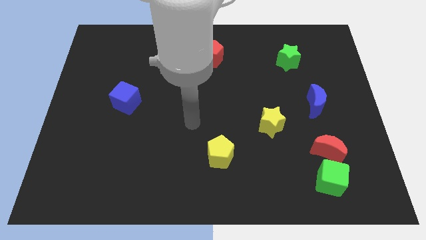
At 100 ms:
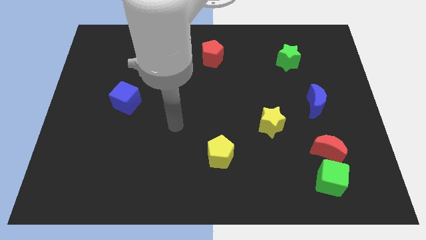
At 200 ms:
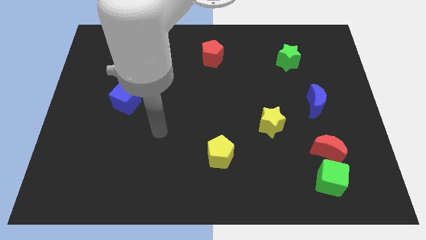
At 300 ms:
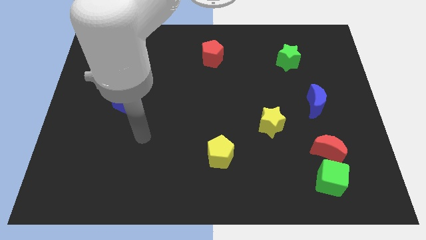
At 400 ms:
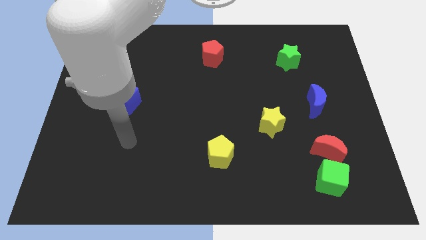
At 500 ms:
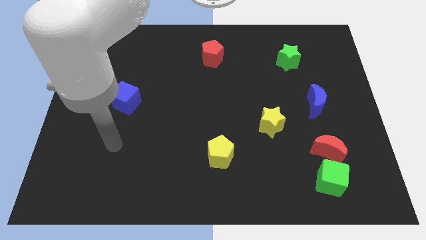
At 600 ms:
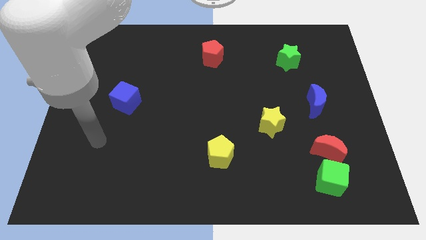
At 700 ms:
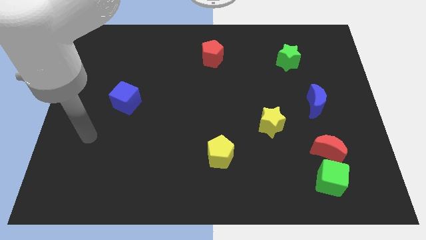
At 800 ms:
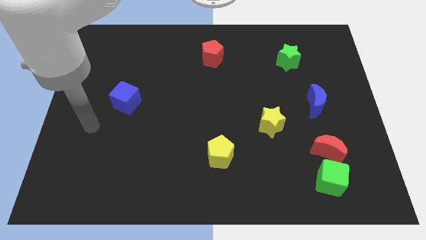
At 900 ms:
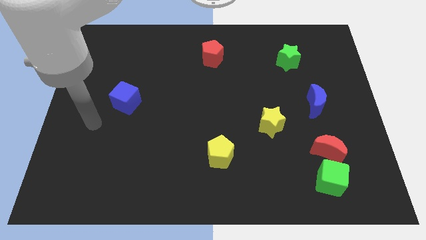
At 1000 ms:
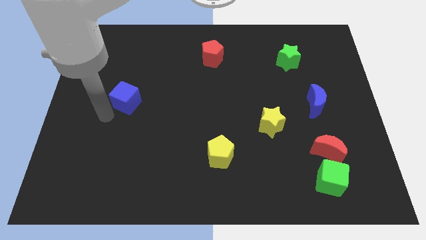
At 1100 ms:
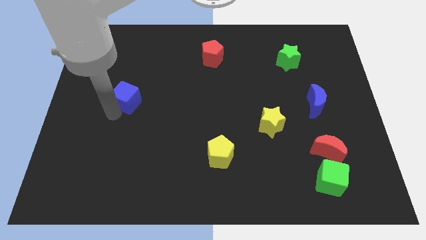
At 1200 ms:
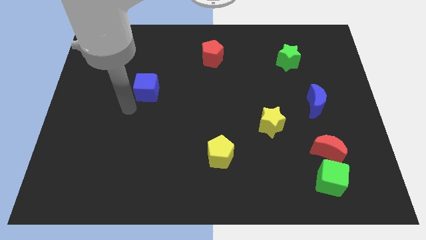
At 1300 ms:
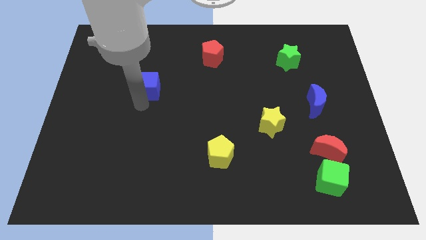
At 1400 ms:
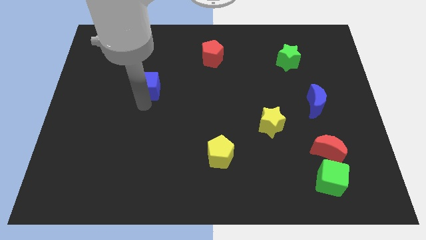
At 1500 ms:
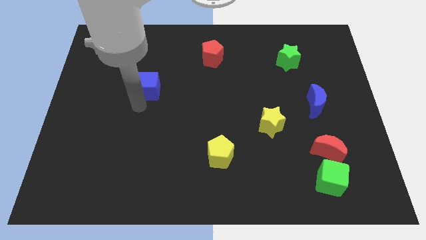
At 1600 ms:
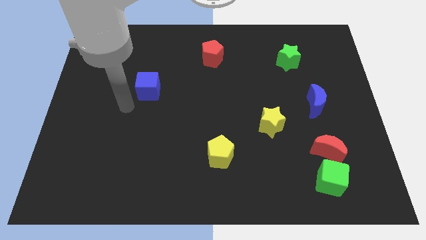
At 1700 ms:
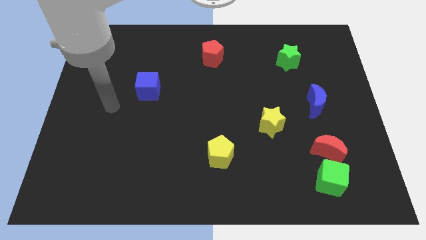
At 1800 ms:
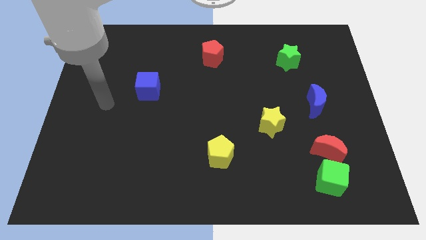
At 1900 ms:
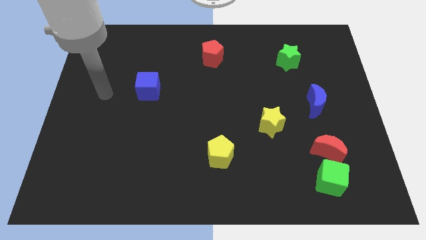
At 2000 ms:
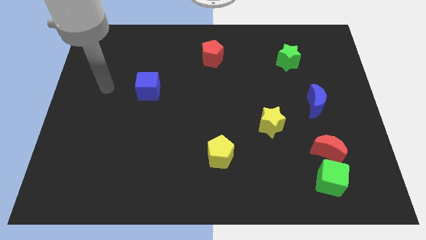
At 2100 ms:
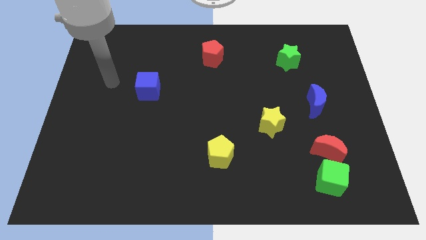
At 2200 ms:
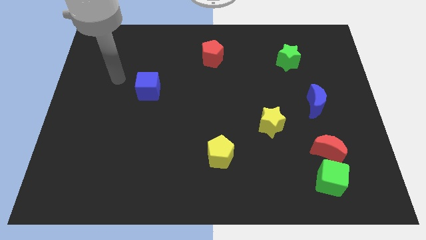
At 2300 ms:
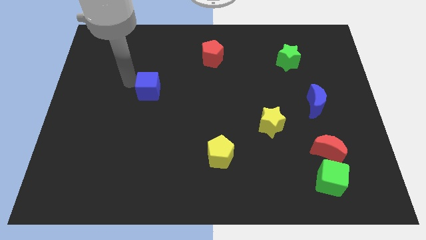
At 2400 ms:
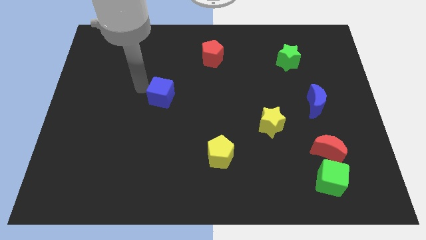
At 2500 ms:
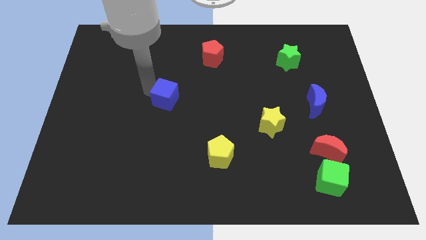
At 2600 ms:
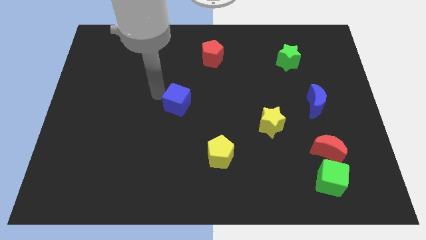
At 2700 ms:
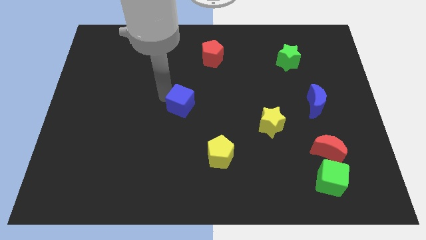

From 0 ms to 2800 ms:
move the blue cube to the bottom left of the red pentagon

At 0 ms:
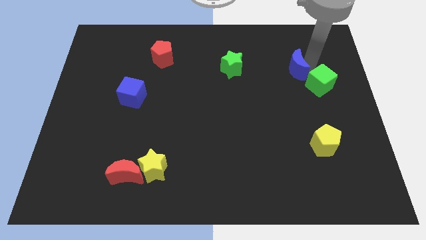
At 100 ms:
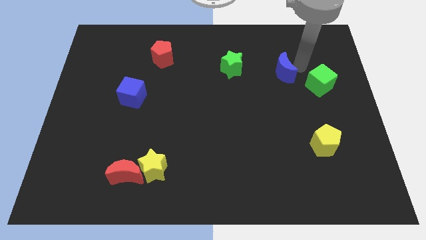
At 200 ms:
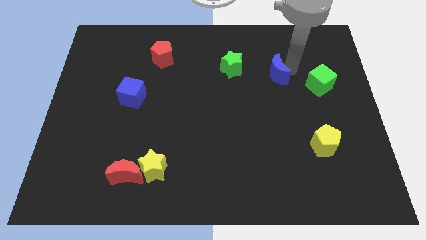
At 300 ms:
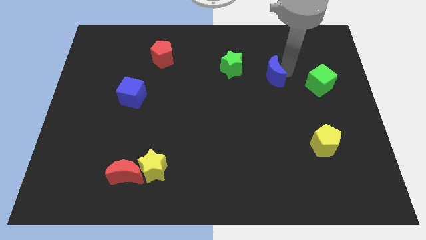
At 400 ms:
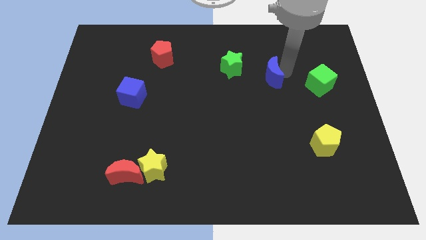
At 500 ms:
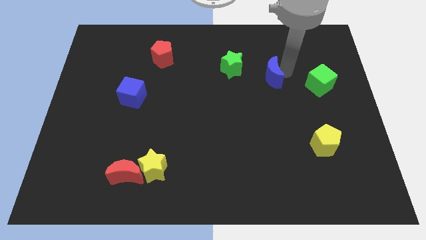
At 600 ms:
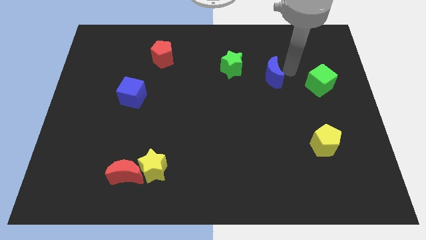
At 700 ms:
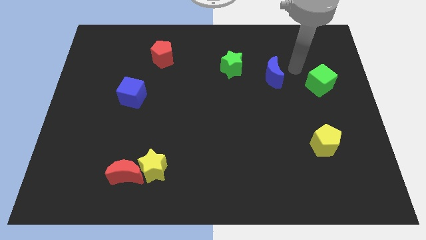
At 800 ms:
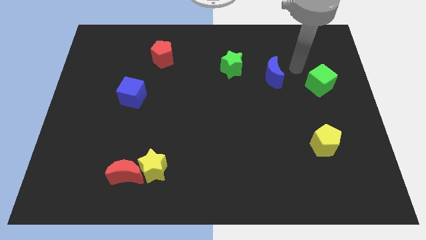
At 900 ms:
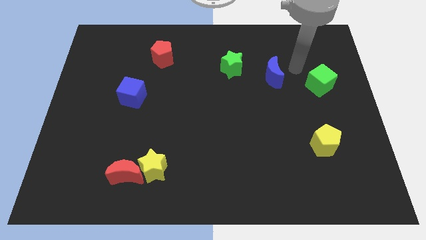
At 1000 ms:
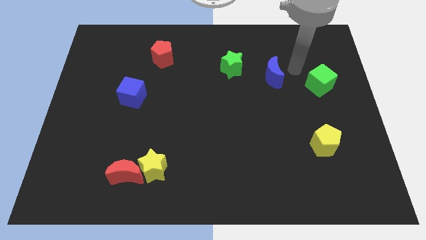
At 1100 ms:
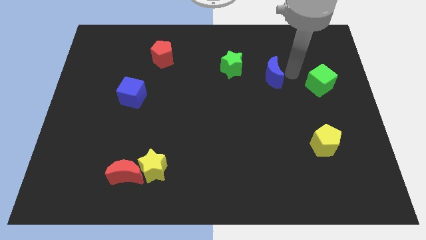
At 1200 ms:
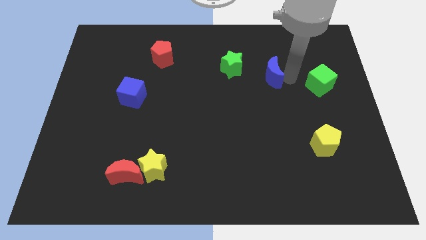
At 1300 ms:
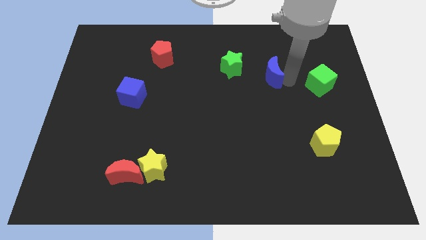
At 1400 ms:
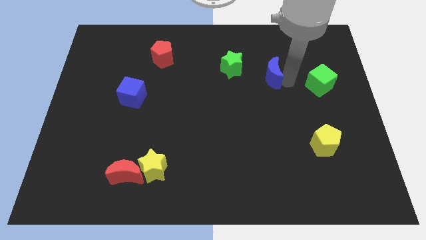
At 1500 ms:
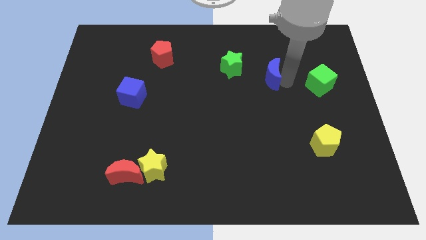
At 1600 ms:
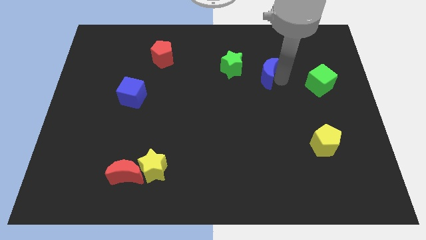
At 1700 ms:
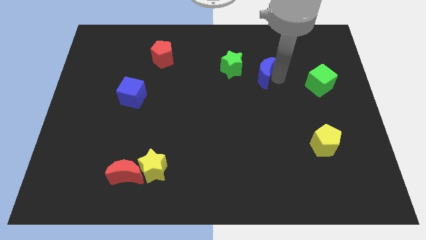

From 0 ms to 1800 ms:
drag the blue moon to the left

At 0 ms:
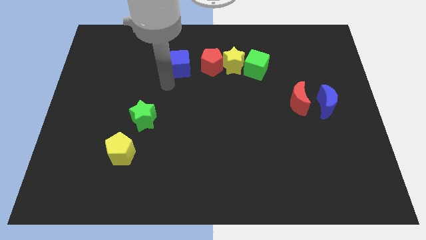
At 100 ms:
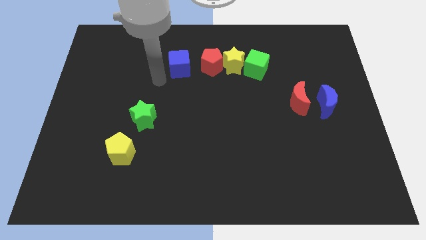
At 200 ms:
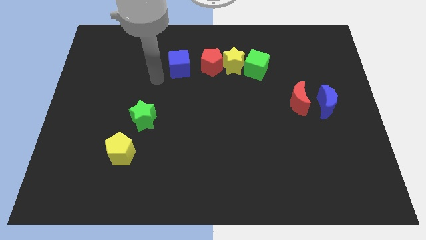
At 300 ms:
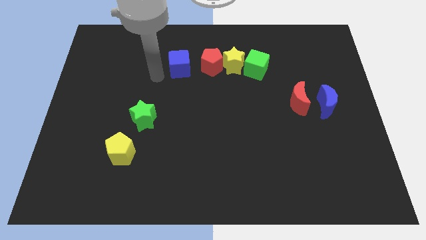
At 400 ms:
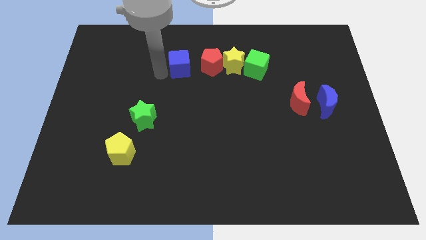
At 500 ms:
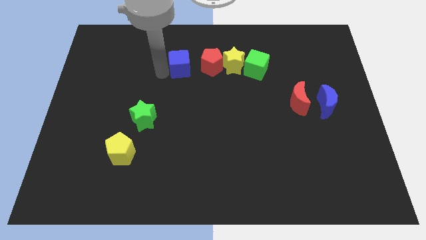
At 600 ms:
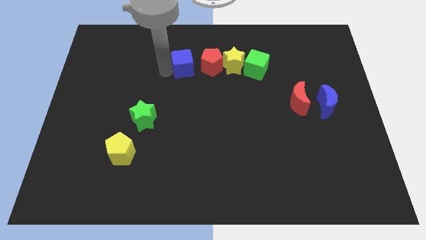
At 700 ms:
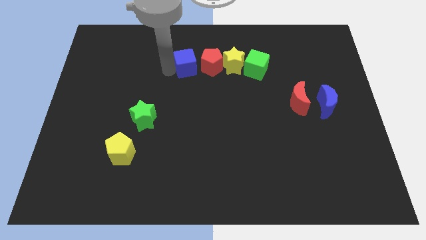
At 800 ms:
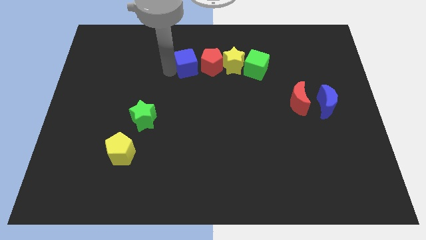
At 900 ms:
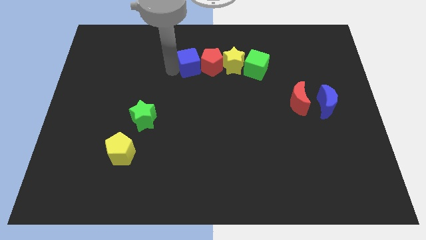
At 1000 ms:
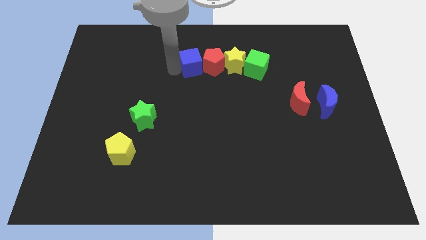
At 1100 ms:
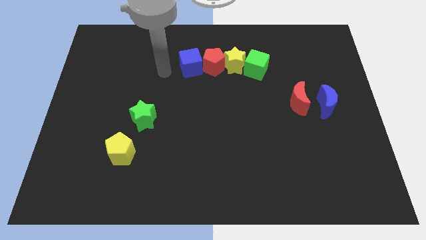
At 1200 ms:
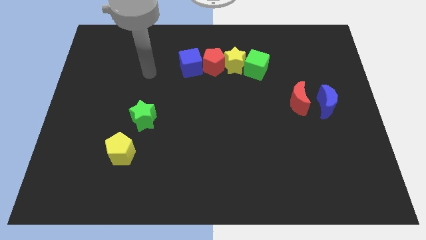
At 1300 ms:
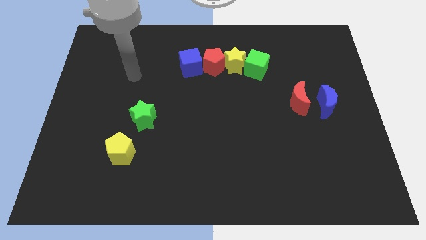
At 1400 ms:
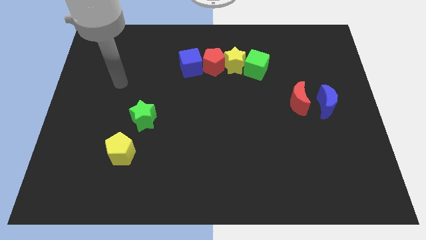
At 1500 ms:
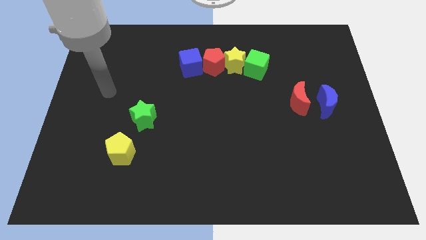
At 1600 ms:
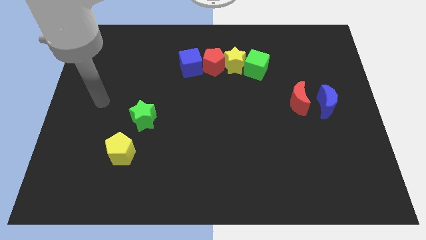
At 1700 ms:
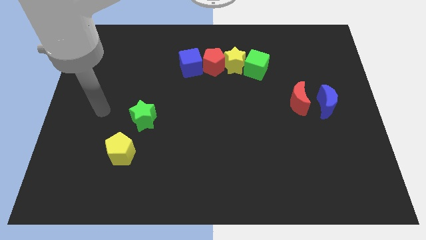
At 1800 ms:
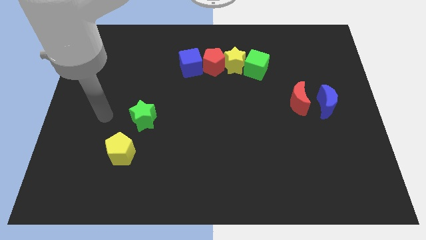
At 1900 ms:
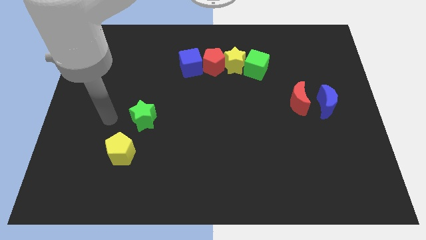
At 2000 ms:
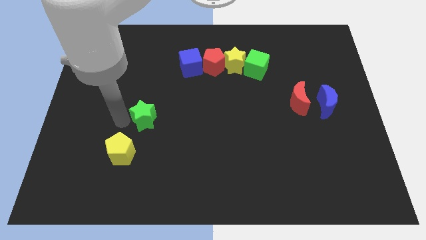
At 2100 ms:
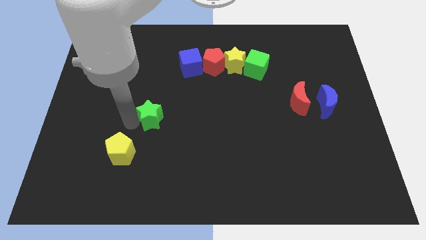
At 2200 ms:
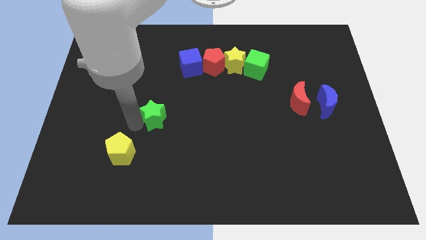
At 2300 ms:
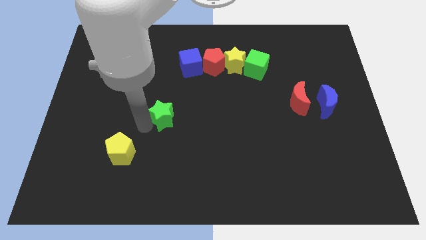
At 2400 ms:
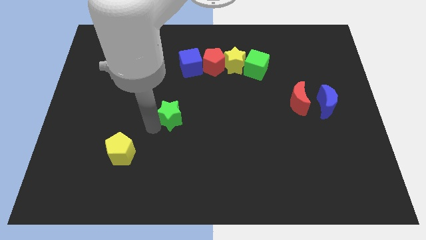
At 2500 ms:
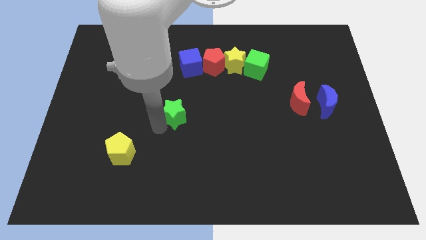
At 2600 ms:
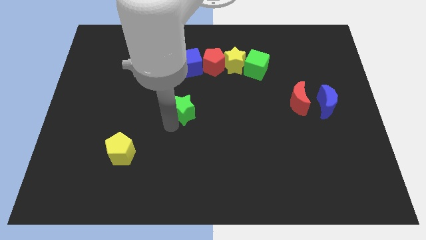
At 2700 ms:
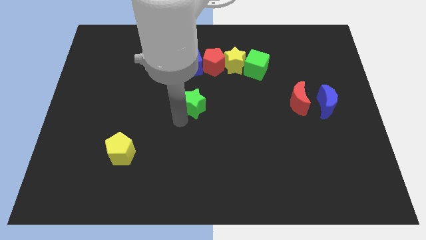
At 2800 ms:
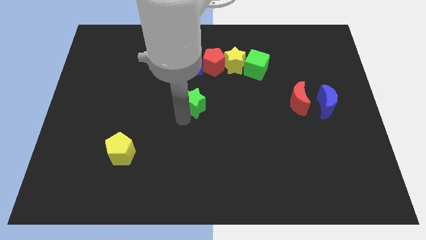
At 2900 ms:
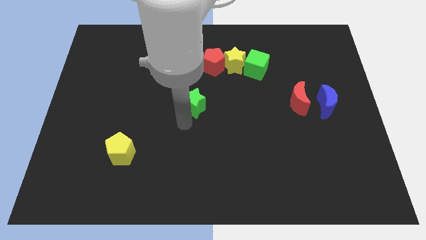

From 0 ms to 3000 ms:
place green star to the bottom of blue cube

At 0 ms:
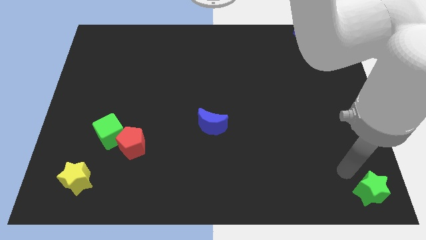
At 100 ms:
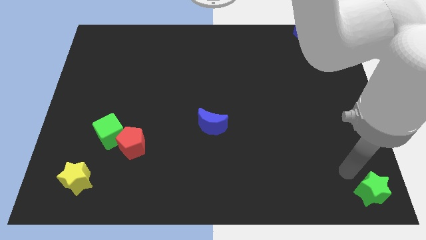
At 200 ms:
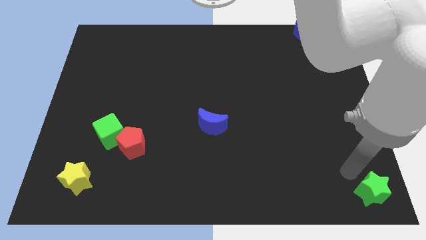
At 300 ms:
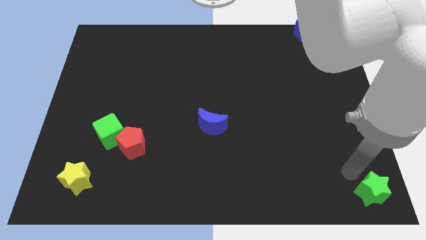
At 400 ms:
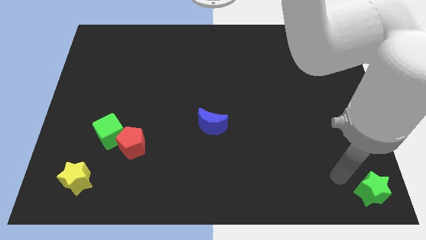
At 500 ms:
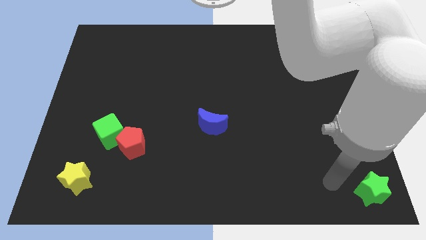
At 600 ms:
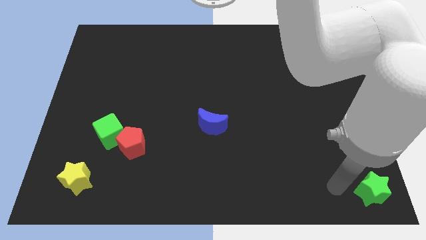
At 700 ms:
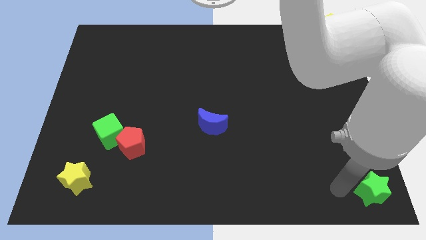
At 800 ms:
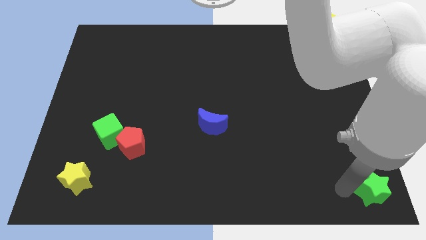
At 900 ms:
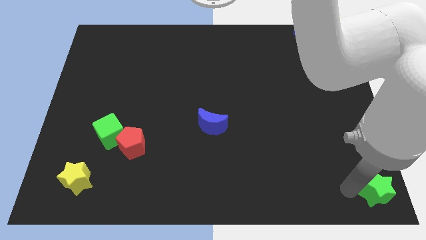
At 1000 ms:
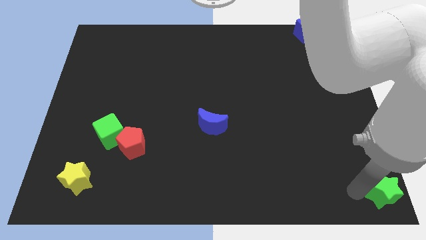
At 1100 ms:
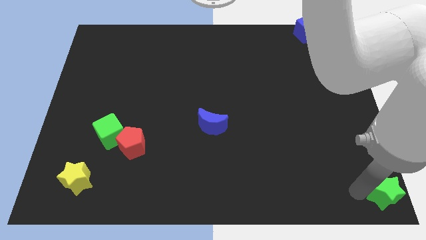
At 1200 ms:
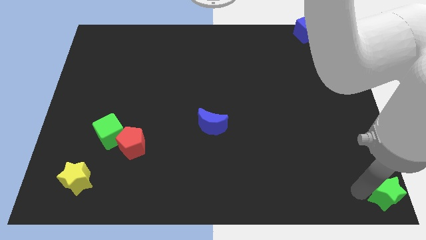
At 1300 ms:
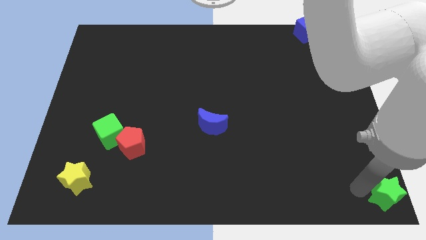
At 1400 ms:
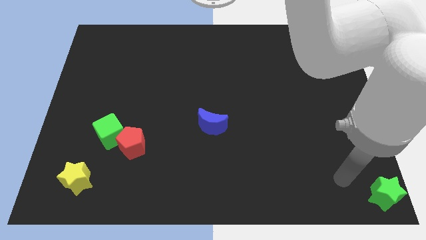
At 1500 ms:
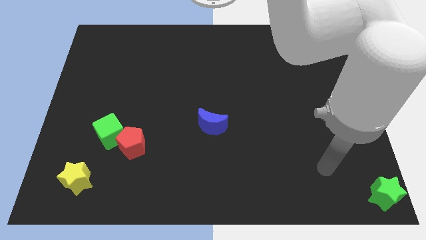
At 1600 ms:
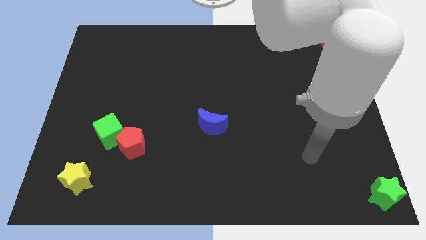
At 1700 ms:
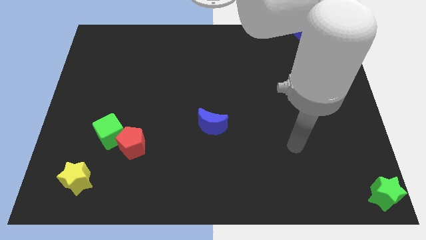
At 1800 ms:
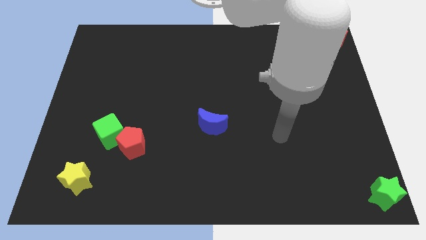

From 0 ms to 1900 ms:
place the green star vertically below the red moon
